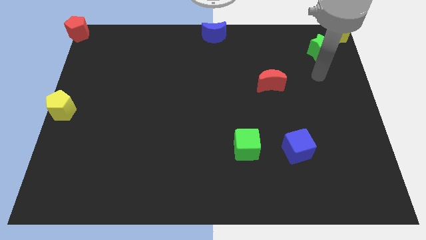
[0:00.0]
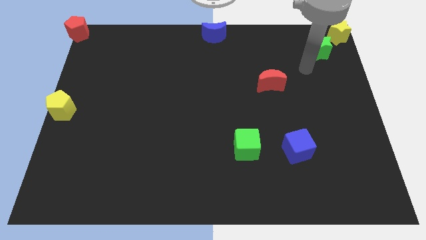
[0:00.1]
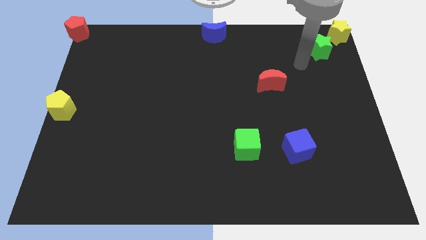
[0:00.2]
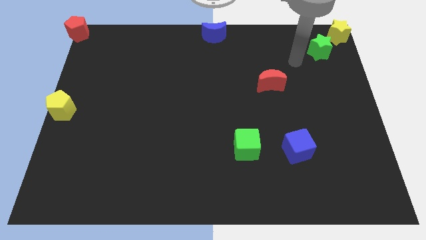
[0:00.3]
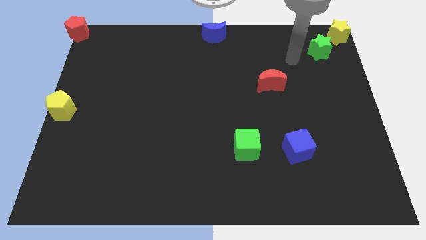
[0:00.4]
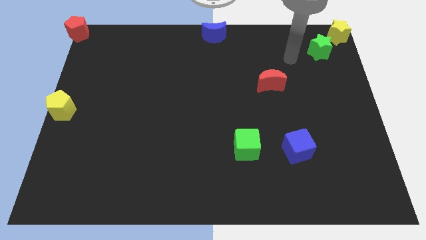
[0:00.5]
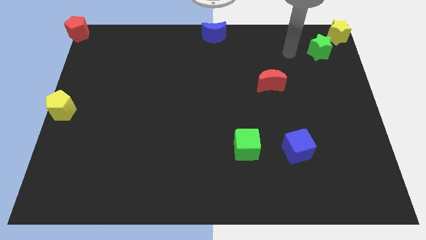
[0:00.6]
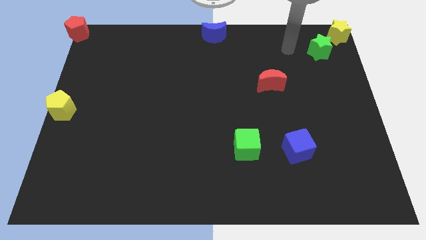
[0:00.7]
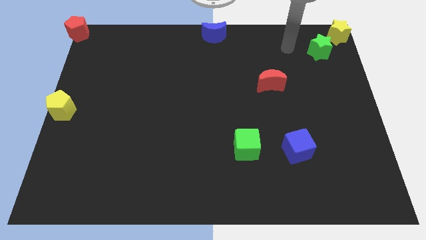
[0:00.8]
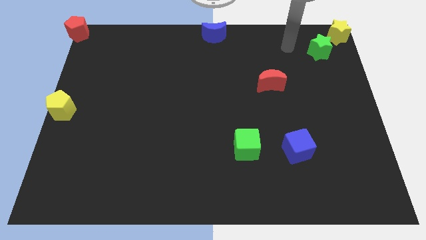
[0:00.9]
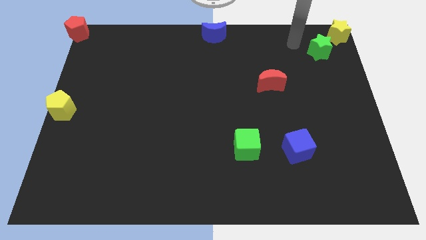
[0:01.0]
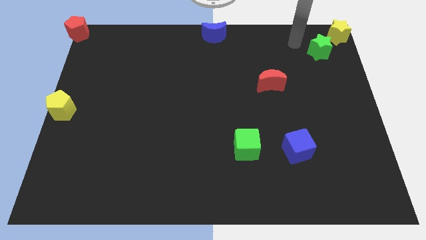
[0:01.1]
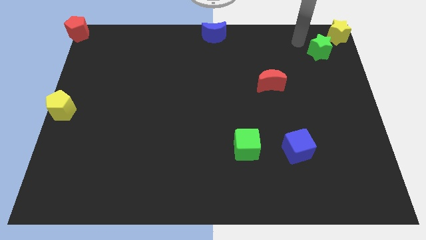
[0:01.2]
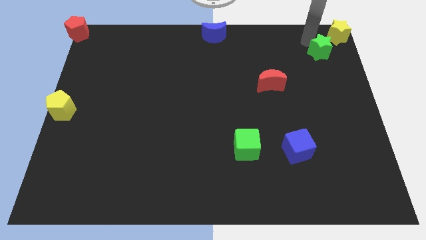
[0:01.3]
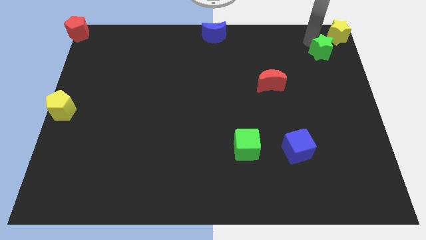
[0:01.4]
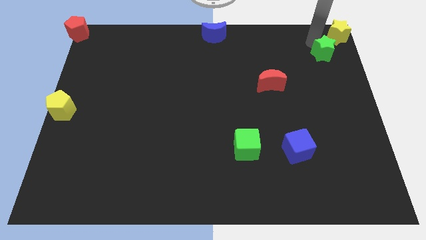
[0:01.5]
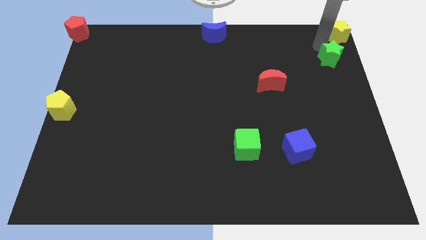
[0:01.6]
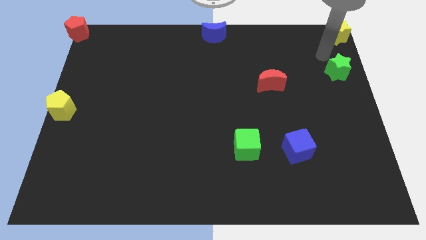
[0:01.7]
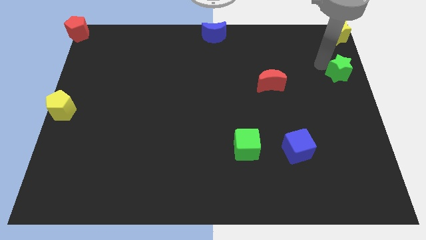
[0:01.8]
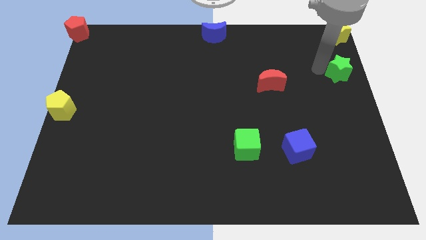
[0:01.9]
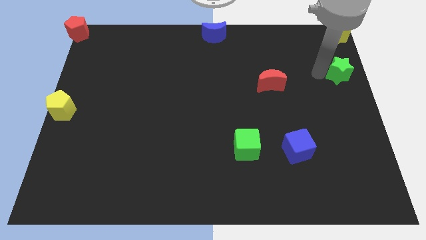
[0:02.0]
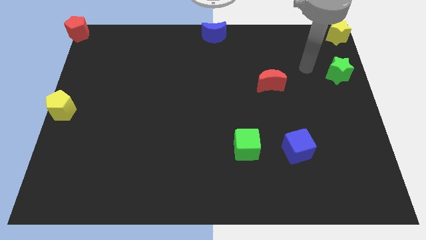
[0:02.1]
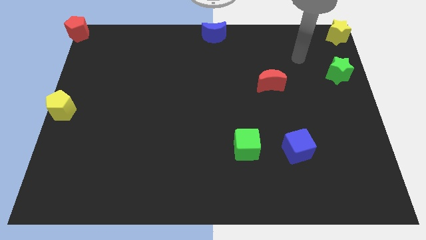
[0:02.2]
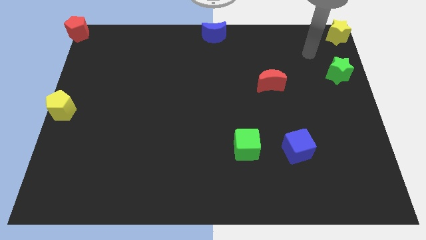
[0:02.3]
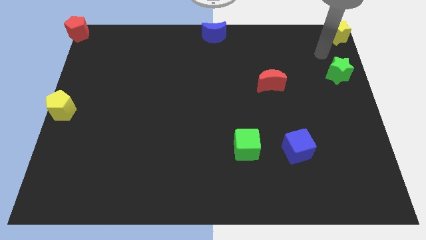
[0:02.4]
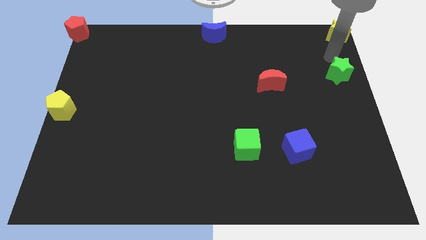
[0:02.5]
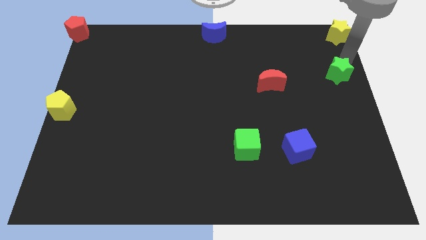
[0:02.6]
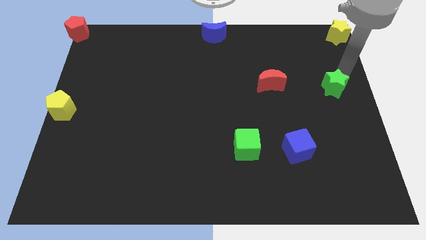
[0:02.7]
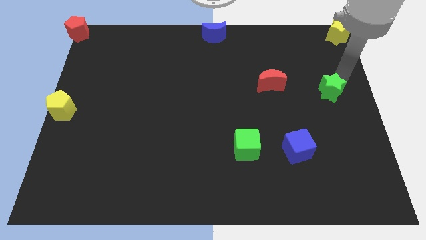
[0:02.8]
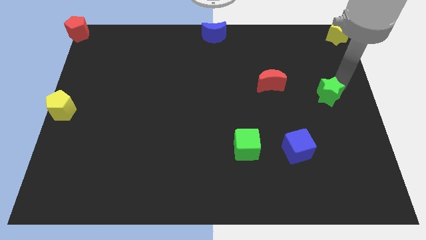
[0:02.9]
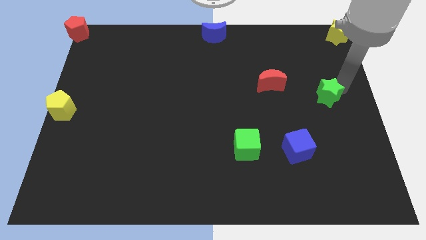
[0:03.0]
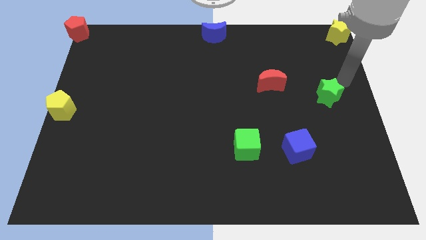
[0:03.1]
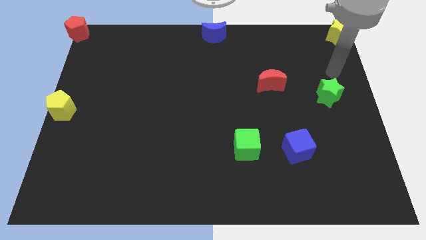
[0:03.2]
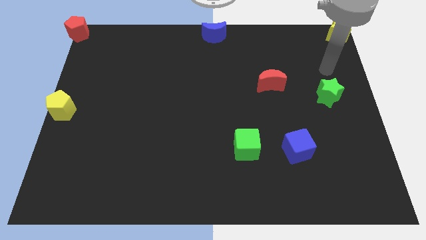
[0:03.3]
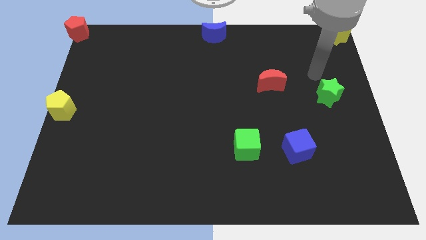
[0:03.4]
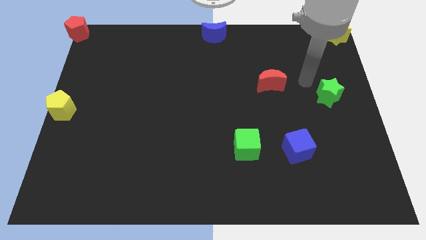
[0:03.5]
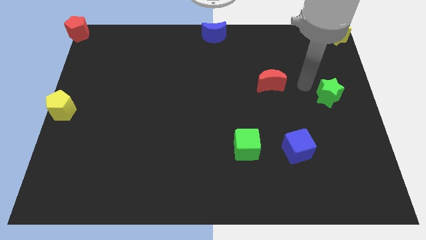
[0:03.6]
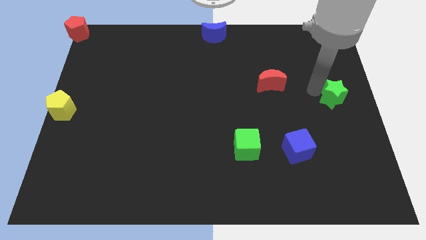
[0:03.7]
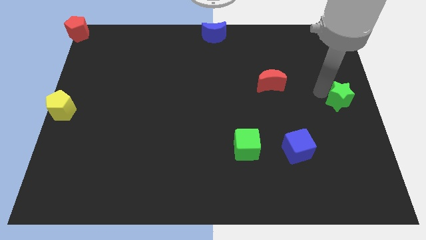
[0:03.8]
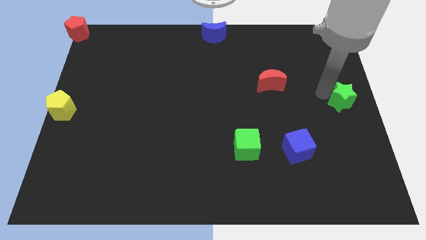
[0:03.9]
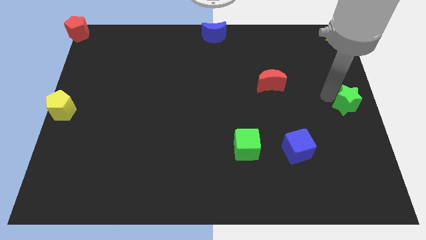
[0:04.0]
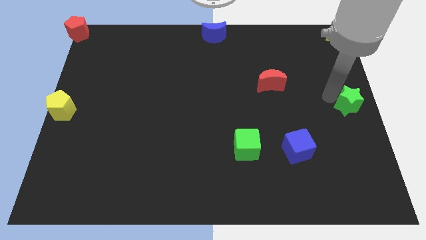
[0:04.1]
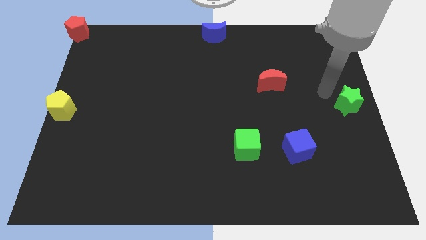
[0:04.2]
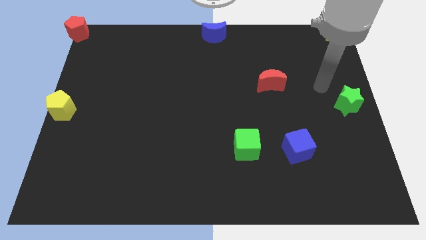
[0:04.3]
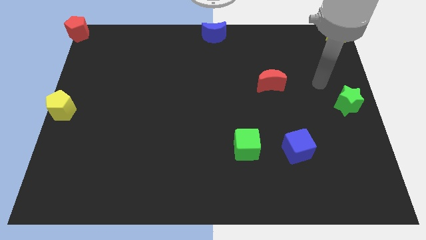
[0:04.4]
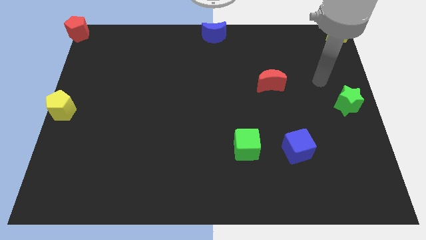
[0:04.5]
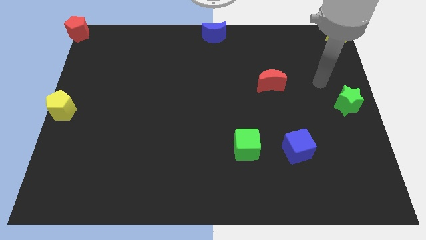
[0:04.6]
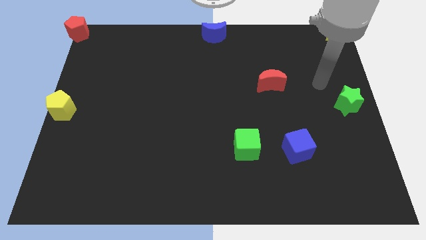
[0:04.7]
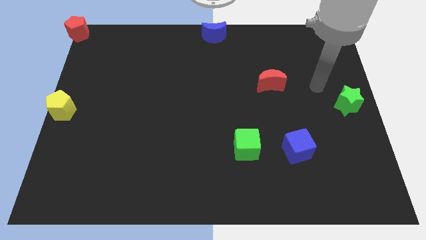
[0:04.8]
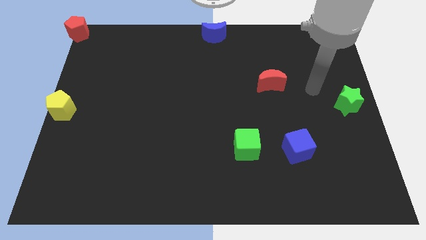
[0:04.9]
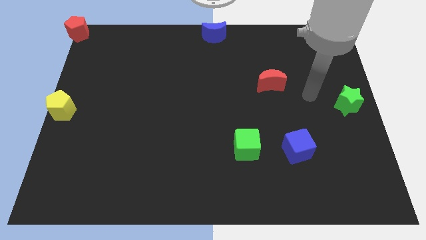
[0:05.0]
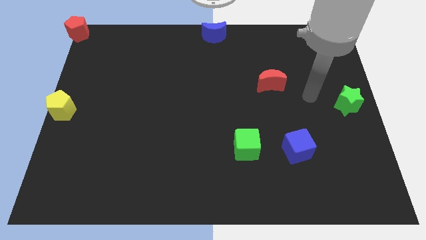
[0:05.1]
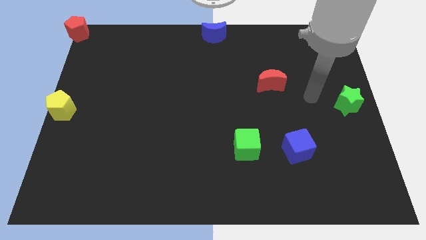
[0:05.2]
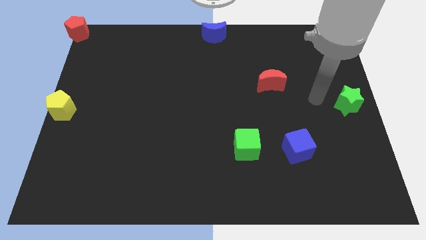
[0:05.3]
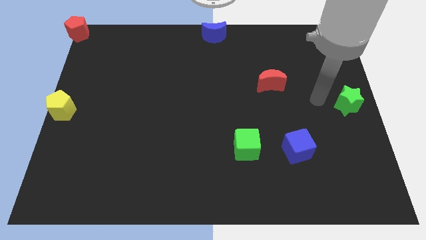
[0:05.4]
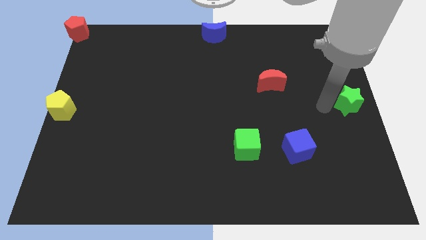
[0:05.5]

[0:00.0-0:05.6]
move green star to the right middle of the board

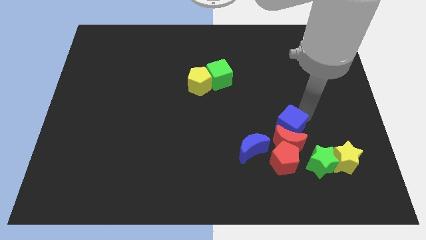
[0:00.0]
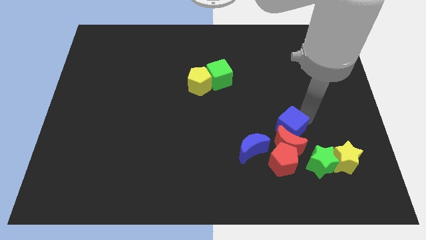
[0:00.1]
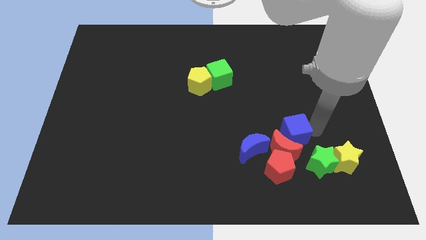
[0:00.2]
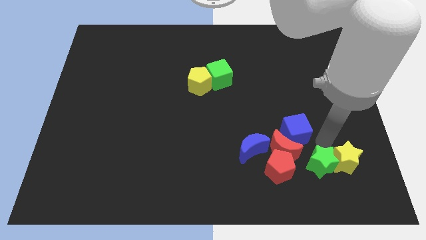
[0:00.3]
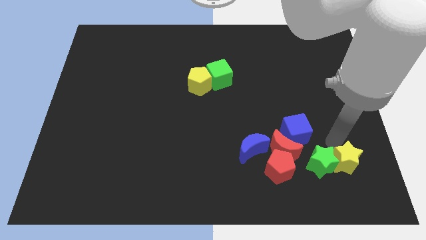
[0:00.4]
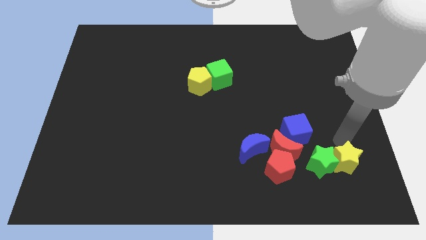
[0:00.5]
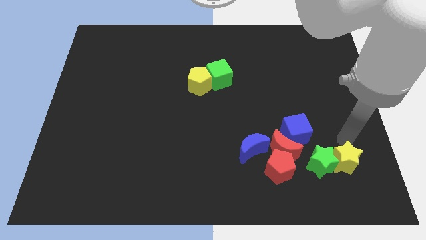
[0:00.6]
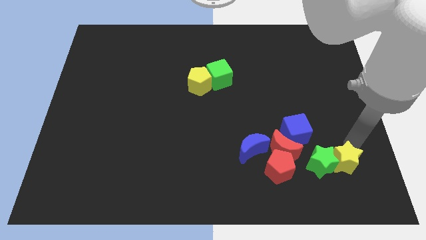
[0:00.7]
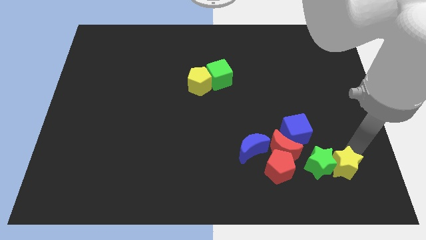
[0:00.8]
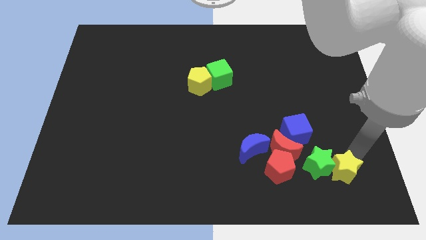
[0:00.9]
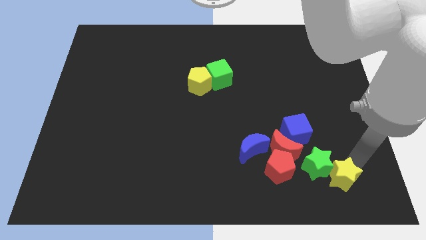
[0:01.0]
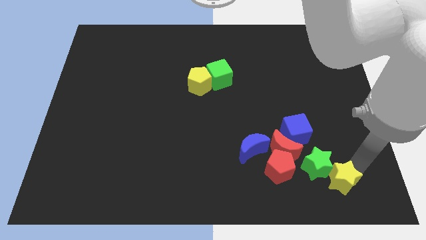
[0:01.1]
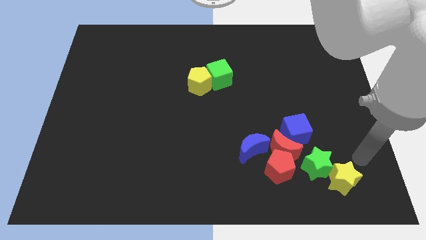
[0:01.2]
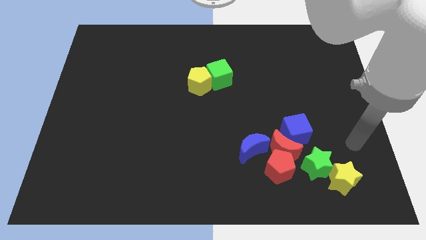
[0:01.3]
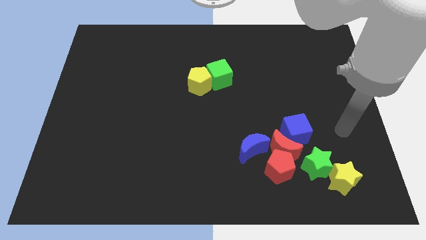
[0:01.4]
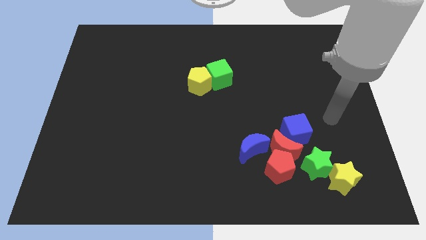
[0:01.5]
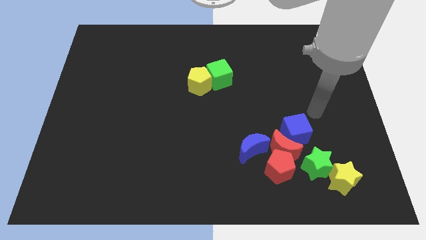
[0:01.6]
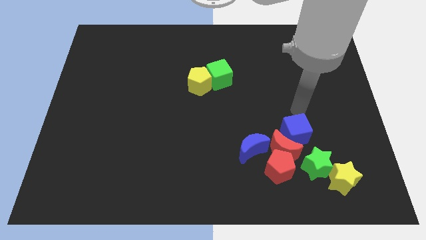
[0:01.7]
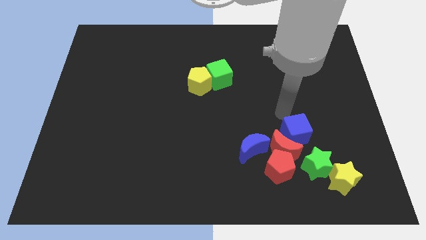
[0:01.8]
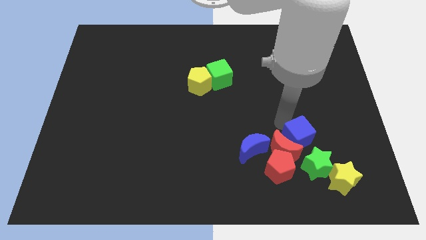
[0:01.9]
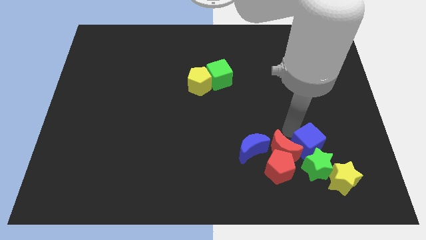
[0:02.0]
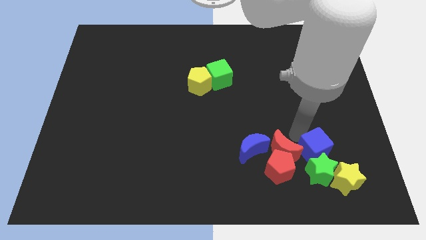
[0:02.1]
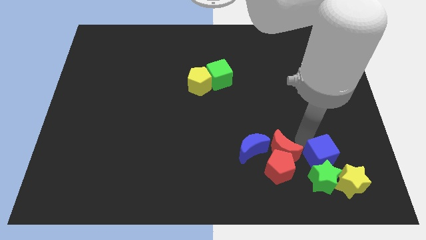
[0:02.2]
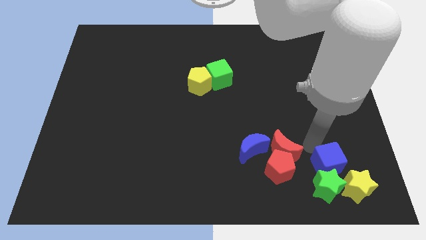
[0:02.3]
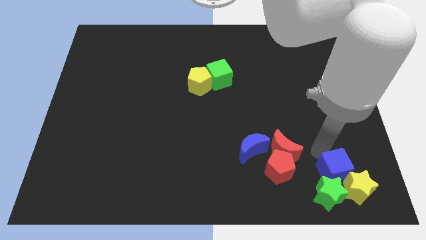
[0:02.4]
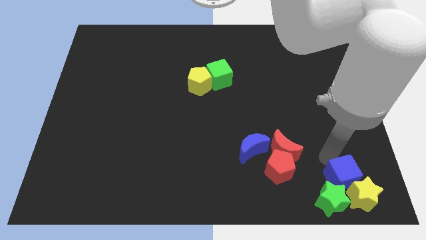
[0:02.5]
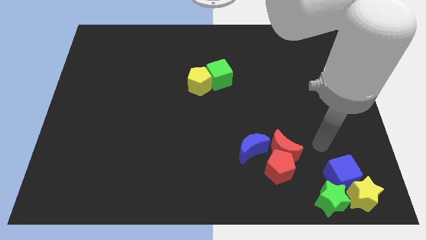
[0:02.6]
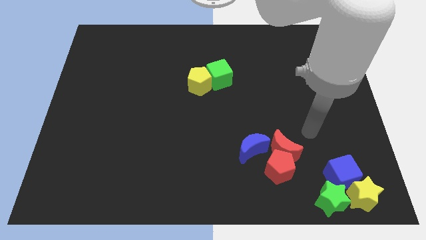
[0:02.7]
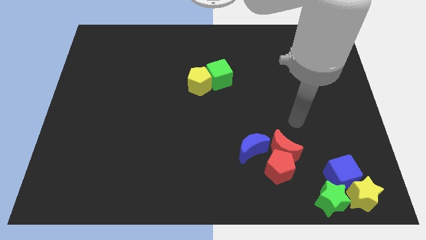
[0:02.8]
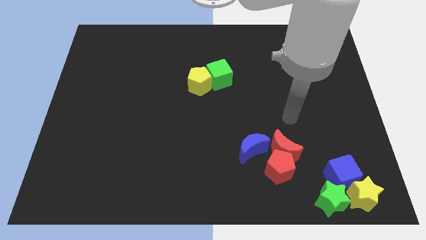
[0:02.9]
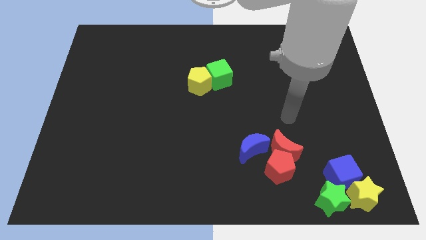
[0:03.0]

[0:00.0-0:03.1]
push the blue cube yellow star and green star to the bottom right of the table

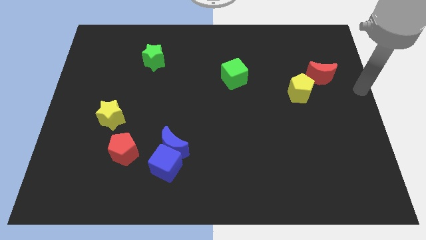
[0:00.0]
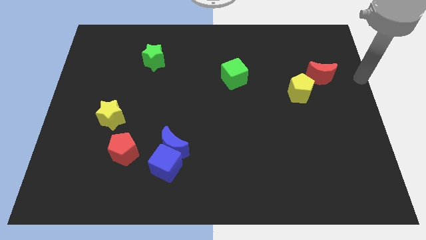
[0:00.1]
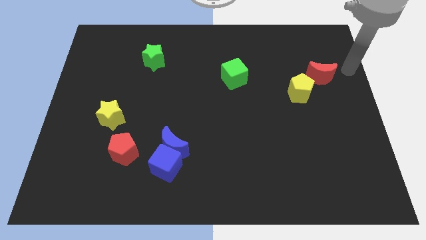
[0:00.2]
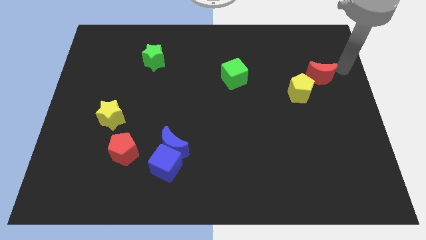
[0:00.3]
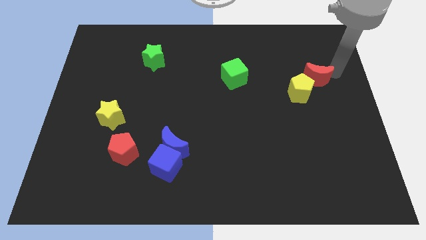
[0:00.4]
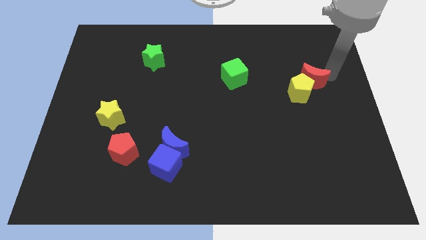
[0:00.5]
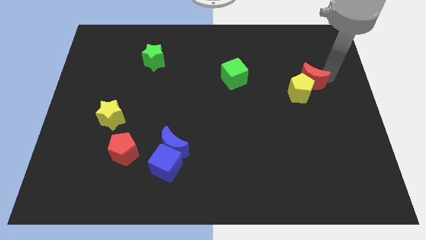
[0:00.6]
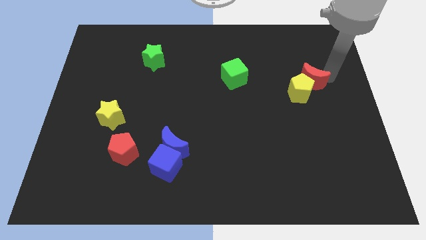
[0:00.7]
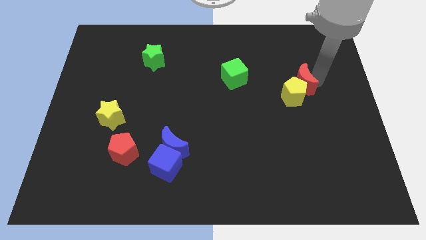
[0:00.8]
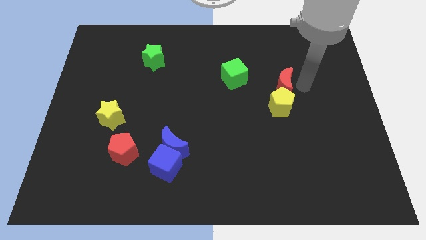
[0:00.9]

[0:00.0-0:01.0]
push the red crecent to the left slightly
